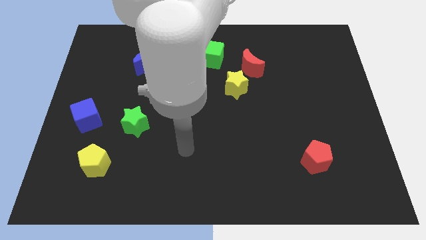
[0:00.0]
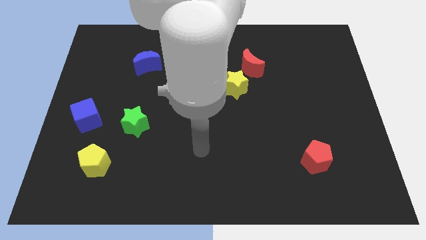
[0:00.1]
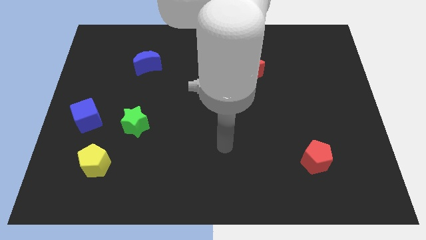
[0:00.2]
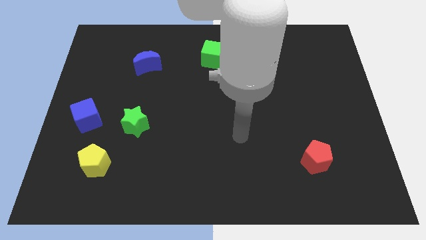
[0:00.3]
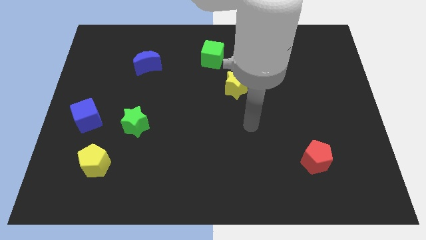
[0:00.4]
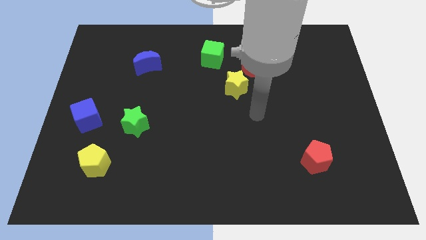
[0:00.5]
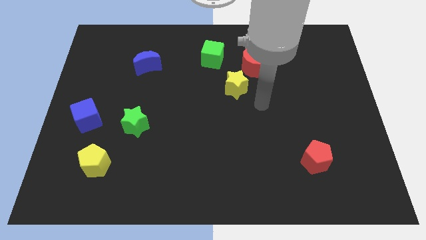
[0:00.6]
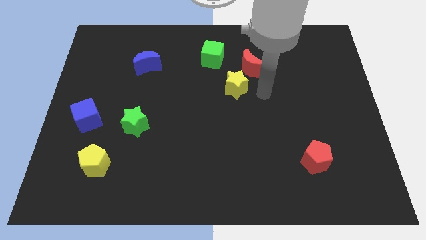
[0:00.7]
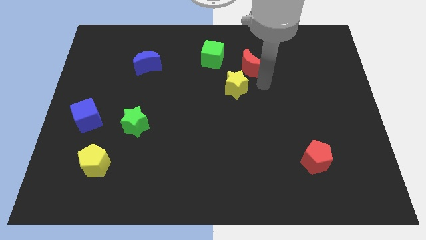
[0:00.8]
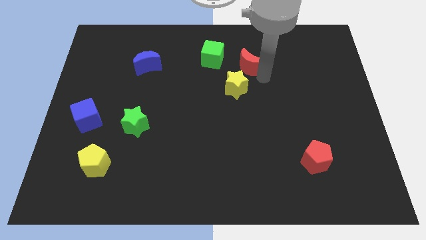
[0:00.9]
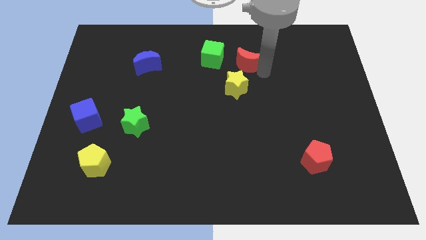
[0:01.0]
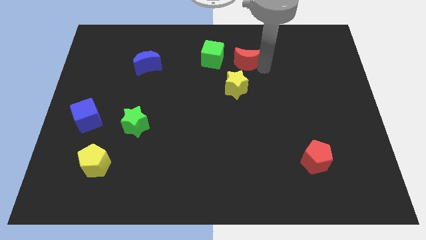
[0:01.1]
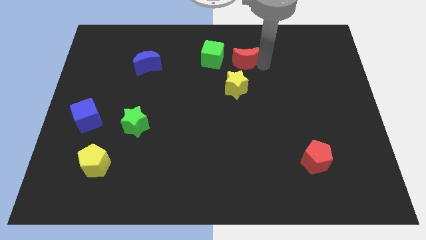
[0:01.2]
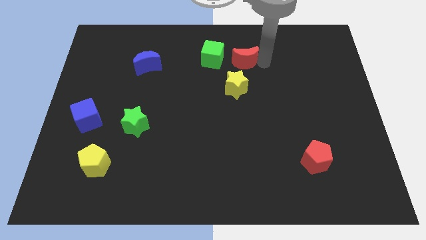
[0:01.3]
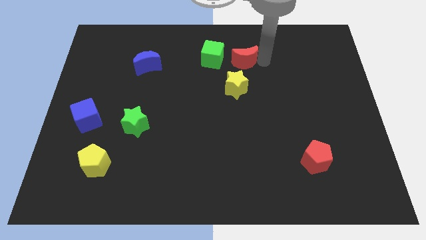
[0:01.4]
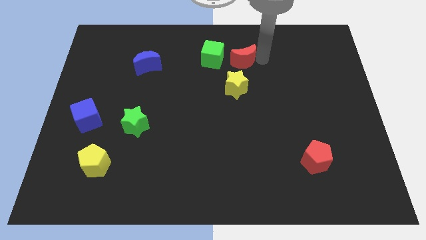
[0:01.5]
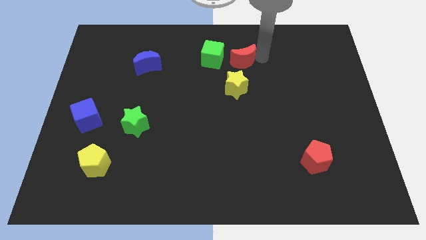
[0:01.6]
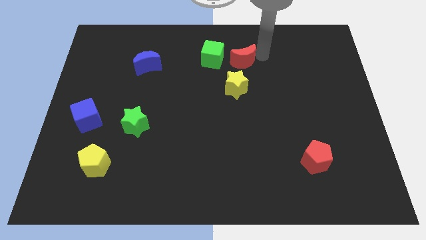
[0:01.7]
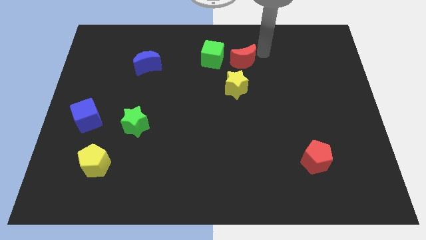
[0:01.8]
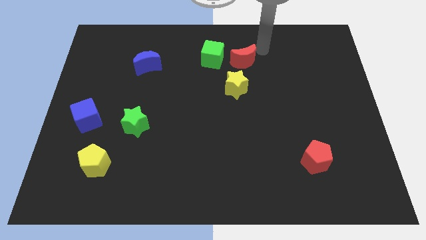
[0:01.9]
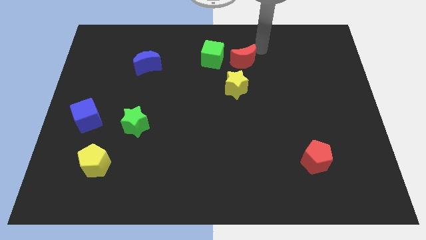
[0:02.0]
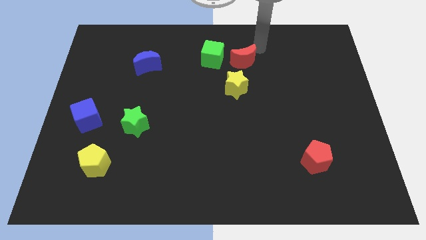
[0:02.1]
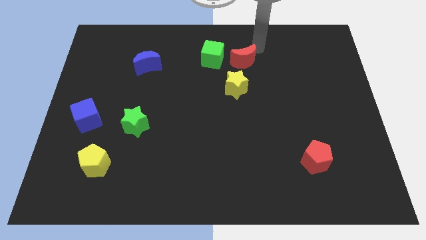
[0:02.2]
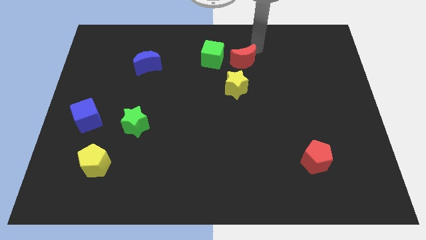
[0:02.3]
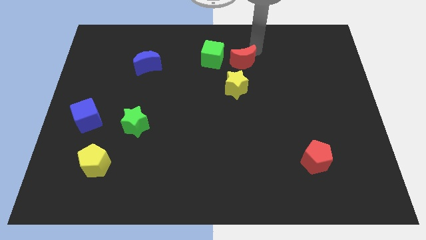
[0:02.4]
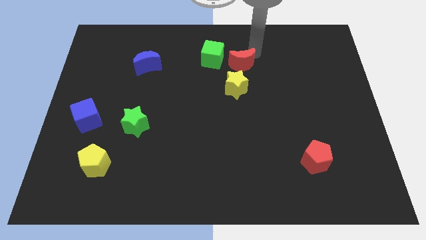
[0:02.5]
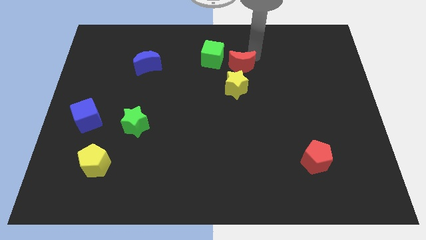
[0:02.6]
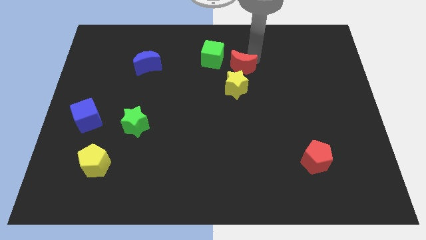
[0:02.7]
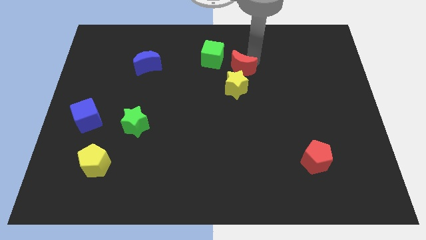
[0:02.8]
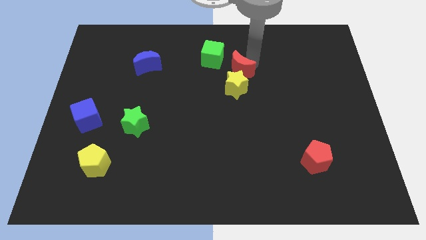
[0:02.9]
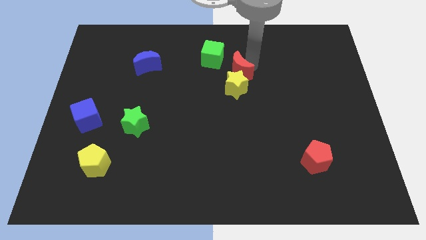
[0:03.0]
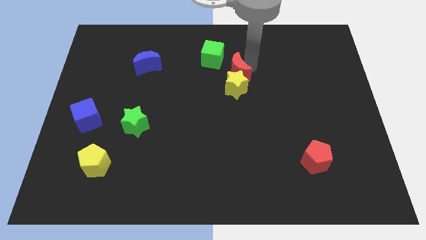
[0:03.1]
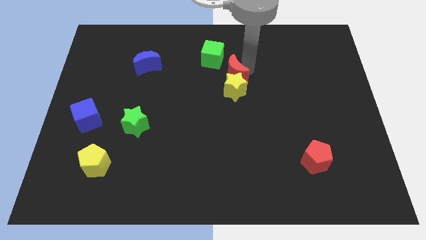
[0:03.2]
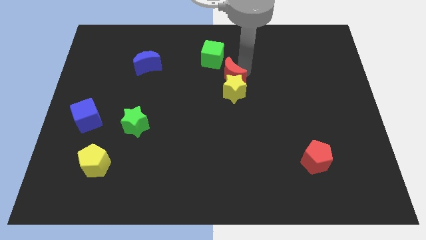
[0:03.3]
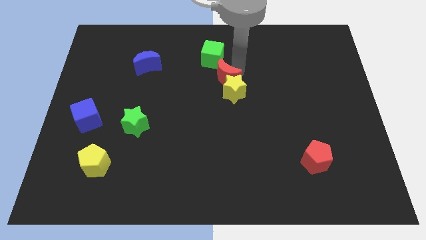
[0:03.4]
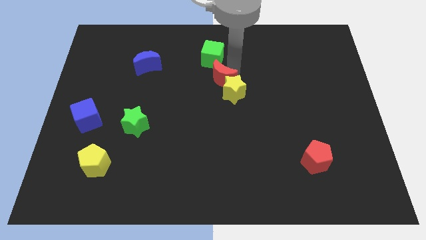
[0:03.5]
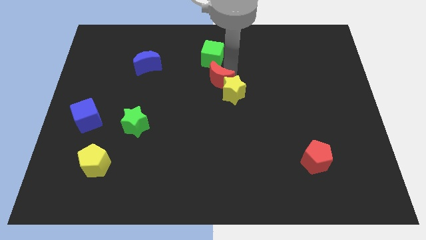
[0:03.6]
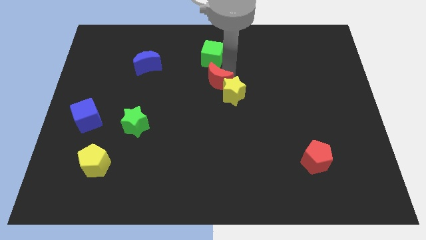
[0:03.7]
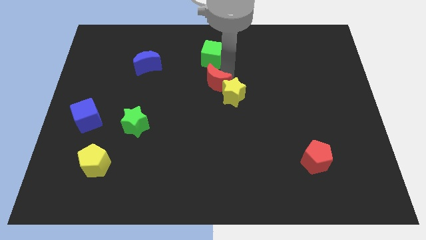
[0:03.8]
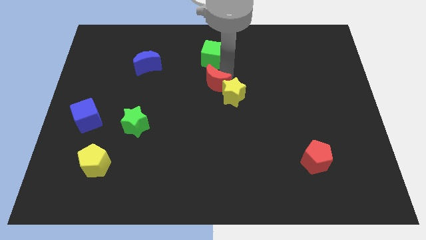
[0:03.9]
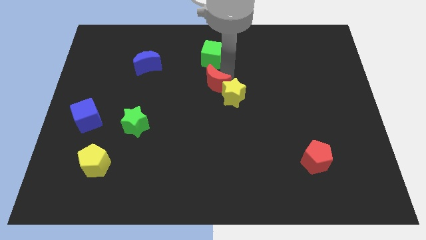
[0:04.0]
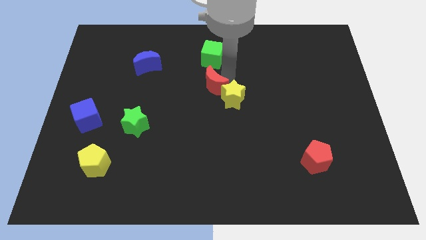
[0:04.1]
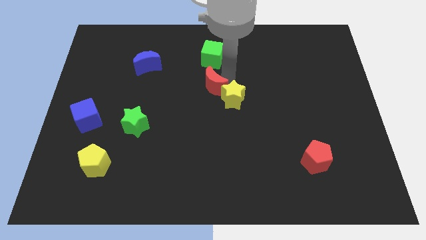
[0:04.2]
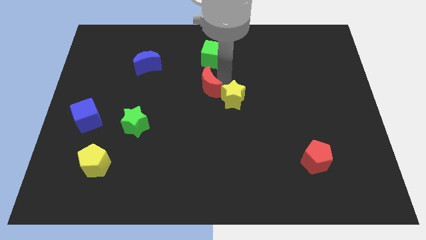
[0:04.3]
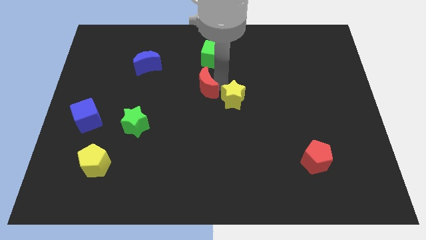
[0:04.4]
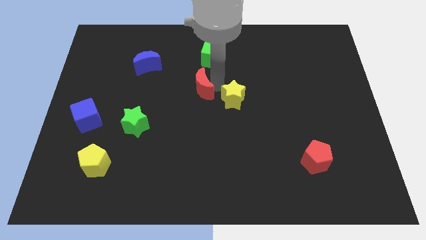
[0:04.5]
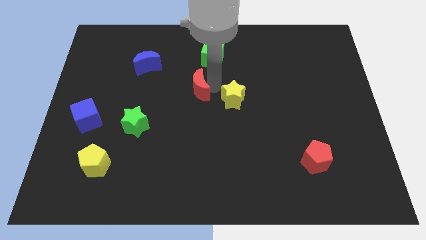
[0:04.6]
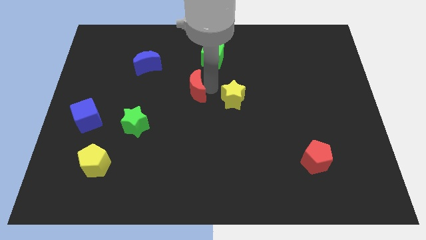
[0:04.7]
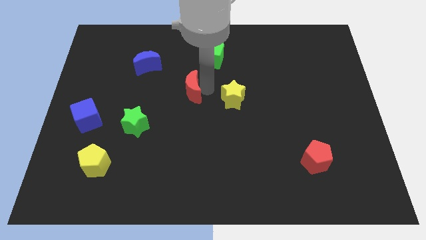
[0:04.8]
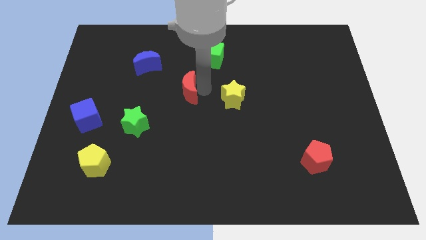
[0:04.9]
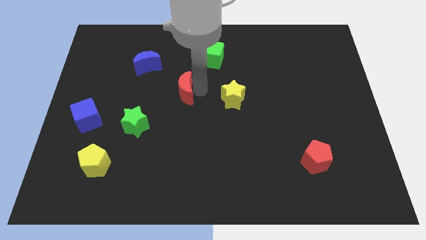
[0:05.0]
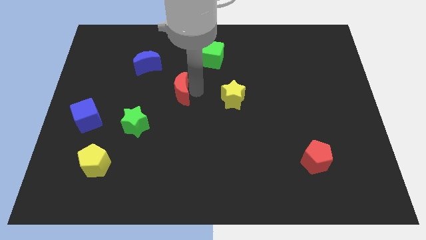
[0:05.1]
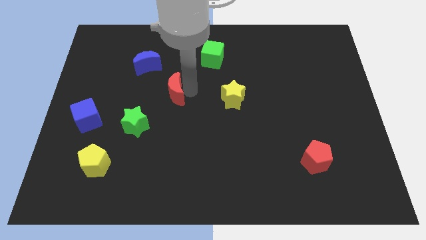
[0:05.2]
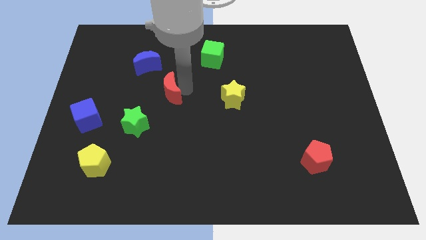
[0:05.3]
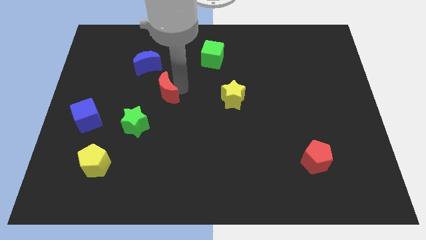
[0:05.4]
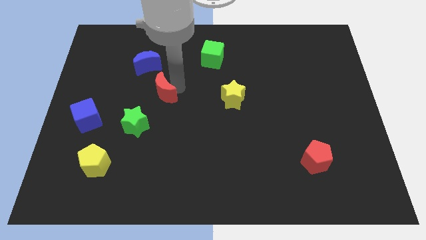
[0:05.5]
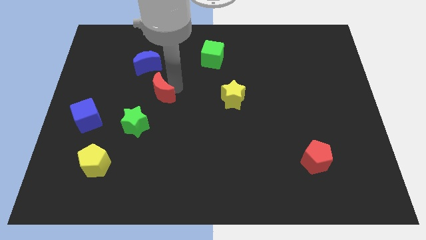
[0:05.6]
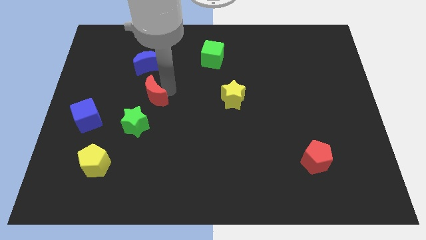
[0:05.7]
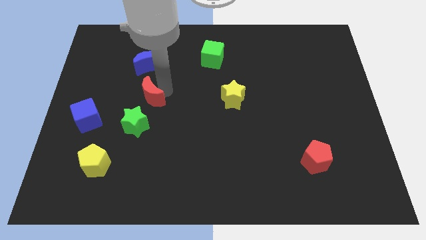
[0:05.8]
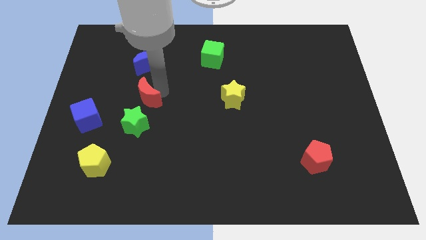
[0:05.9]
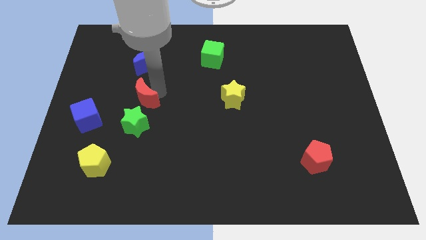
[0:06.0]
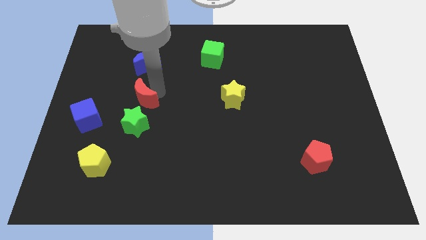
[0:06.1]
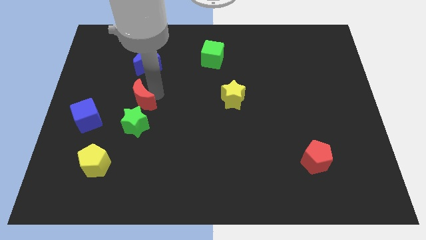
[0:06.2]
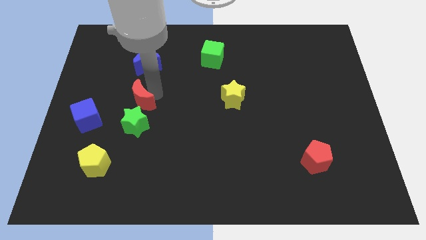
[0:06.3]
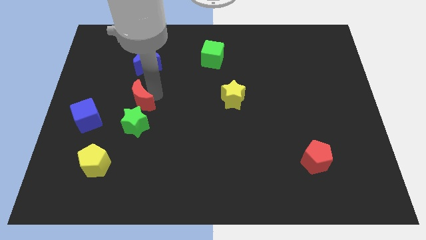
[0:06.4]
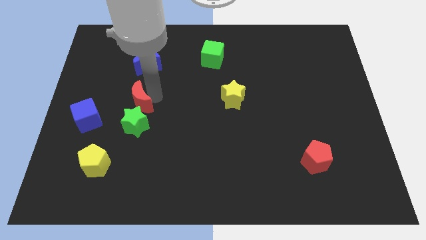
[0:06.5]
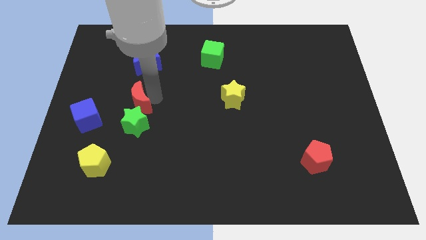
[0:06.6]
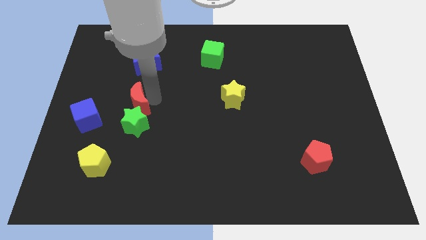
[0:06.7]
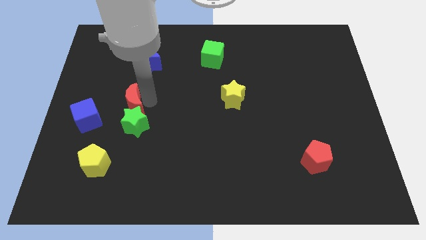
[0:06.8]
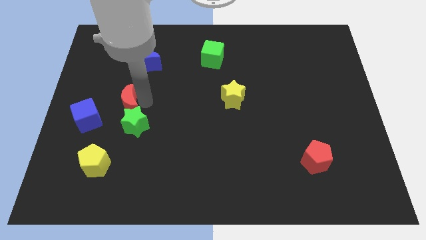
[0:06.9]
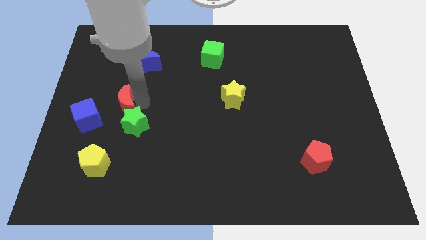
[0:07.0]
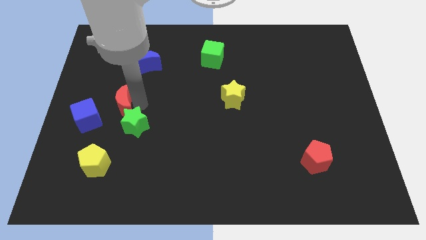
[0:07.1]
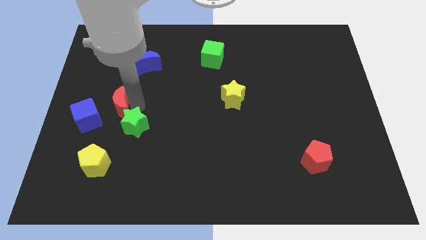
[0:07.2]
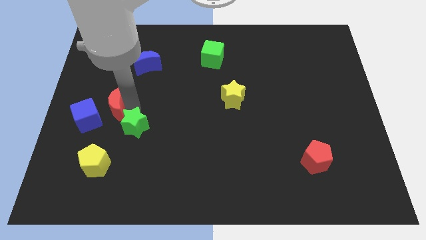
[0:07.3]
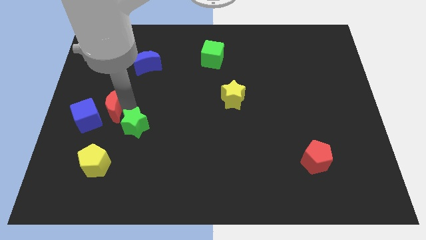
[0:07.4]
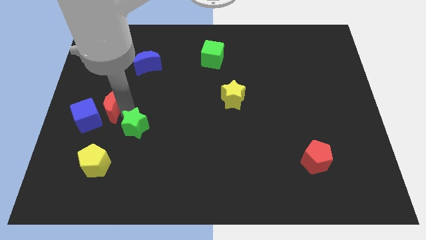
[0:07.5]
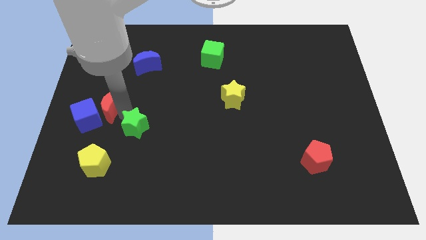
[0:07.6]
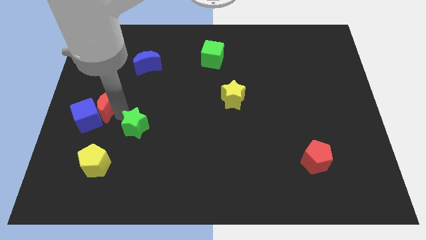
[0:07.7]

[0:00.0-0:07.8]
move the red moon towards the blue cube

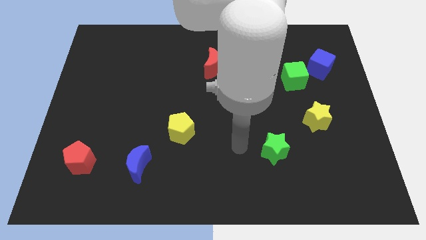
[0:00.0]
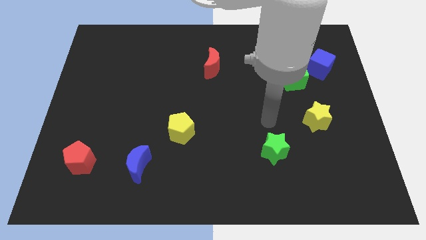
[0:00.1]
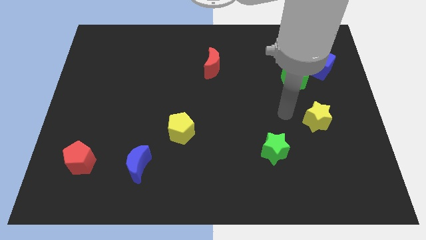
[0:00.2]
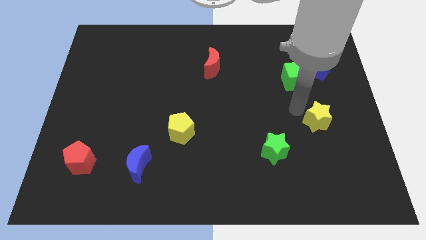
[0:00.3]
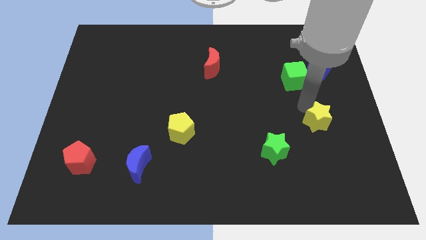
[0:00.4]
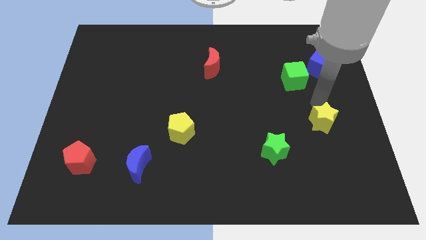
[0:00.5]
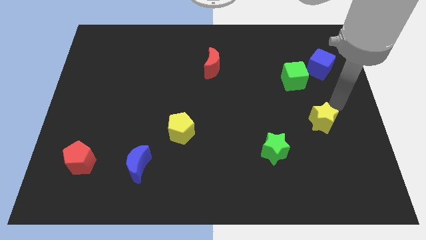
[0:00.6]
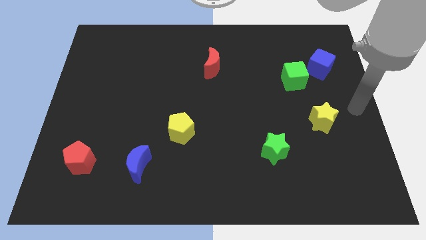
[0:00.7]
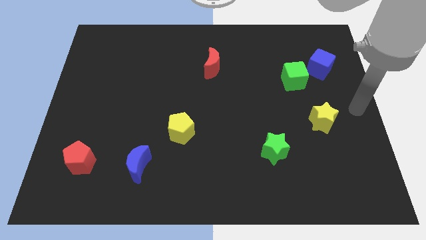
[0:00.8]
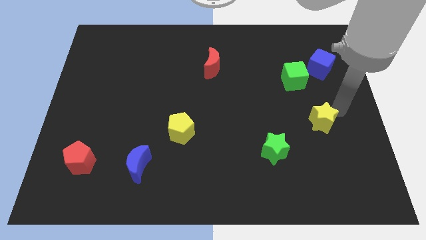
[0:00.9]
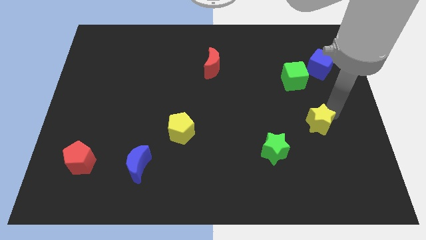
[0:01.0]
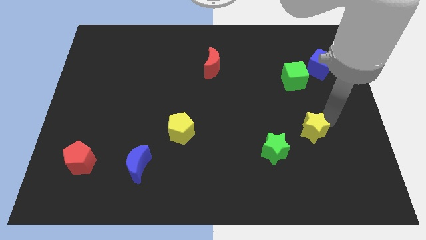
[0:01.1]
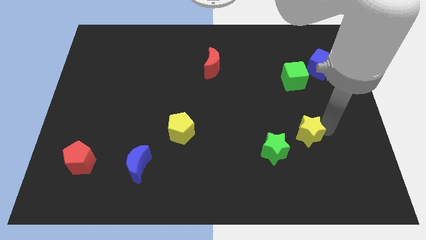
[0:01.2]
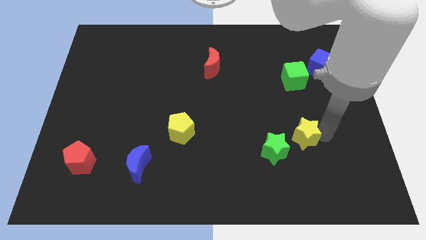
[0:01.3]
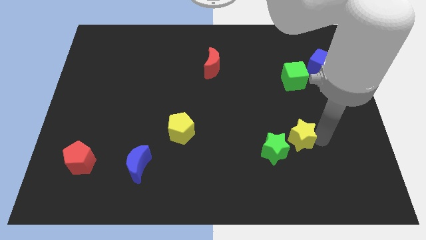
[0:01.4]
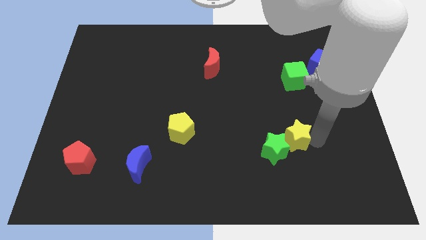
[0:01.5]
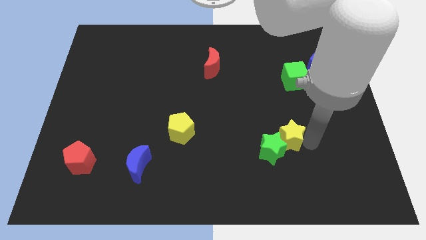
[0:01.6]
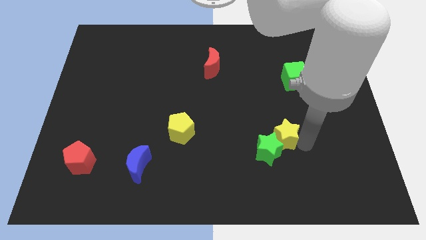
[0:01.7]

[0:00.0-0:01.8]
push the yellow star next to the green star
